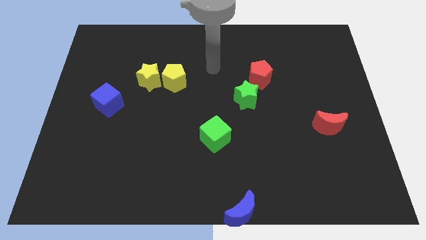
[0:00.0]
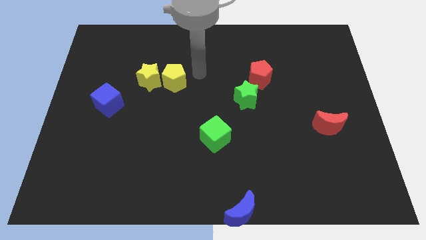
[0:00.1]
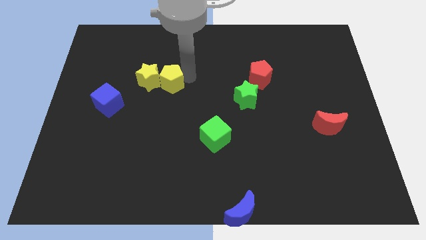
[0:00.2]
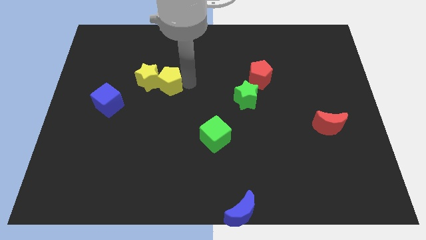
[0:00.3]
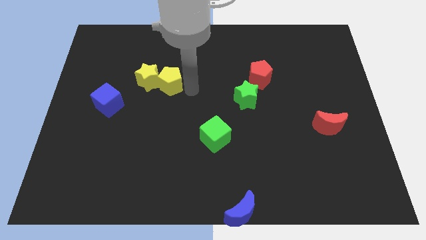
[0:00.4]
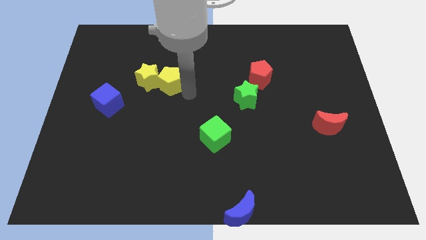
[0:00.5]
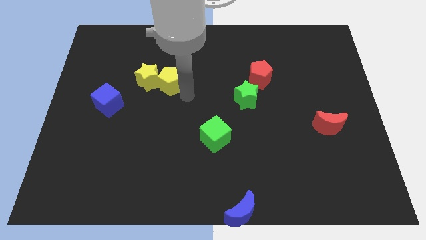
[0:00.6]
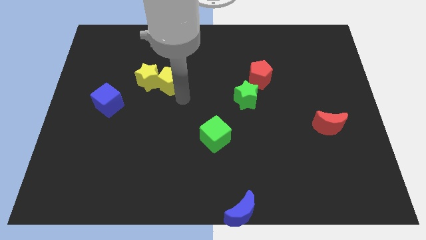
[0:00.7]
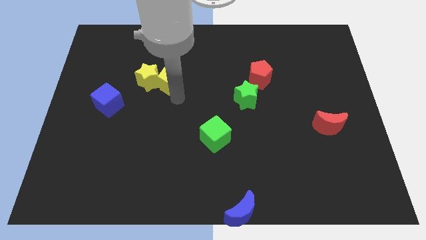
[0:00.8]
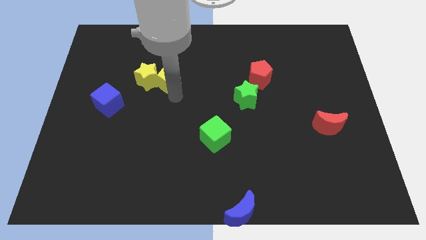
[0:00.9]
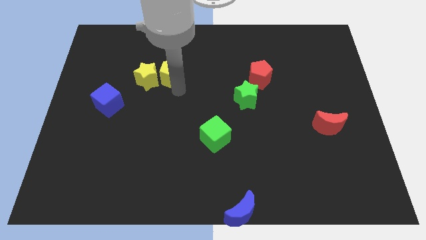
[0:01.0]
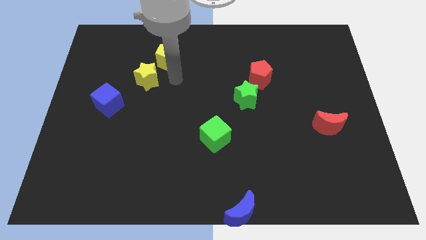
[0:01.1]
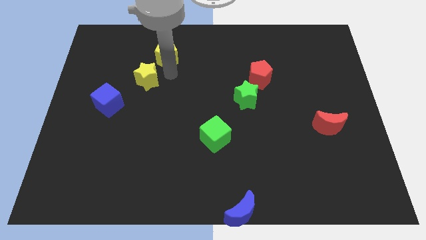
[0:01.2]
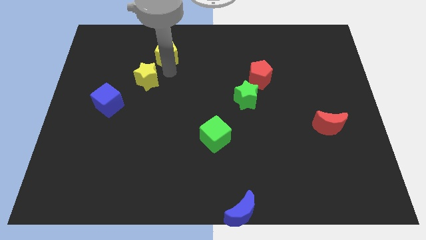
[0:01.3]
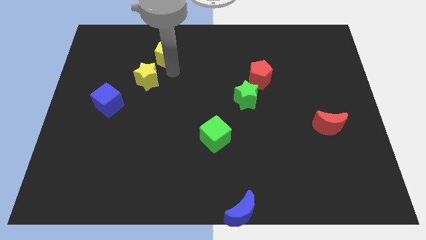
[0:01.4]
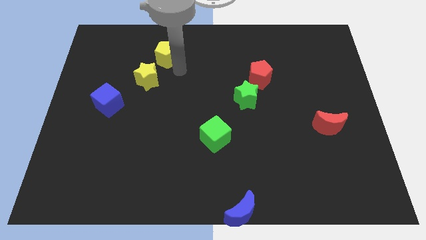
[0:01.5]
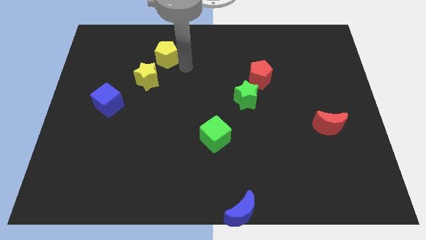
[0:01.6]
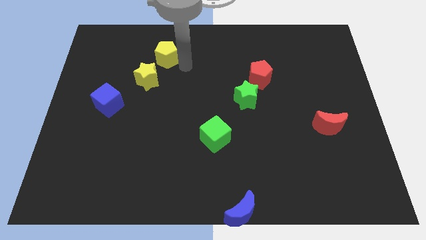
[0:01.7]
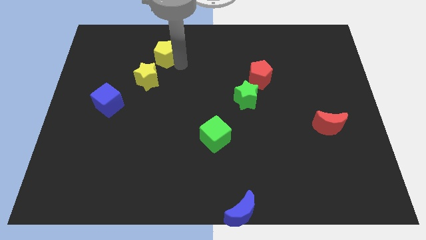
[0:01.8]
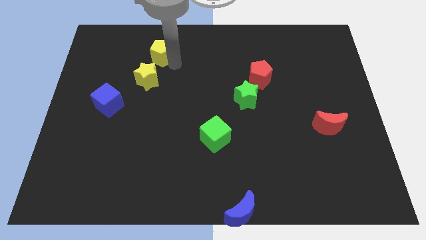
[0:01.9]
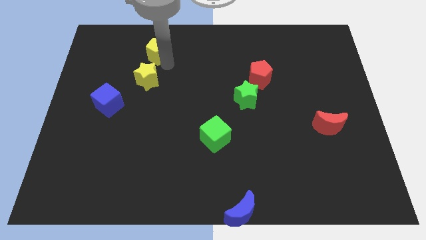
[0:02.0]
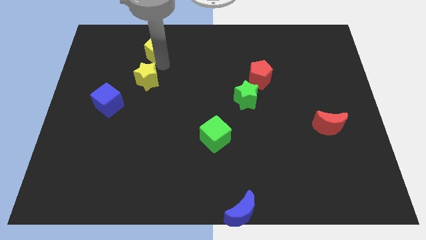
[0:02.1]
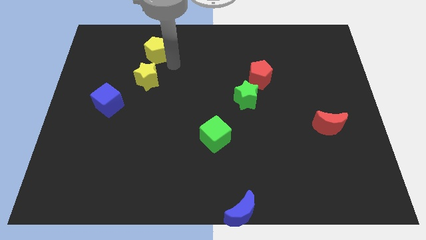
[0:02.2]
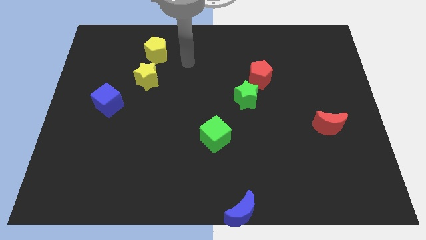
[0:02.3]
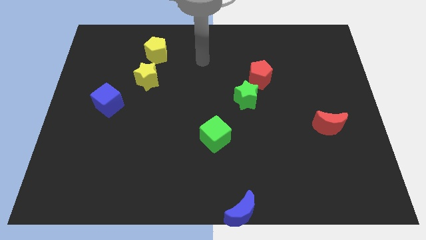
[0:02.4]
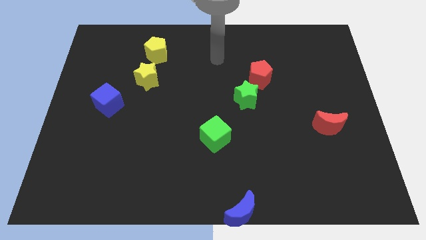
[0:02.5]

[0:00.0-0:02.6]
move the yellow pentagon above the yellow star

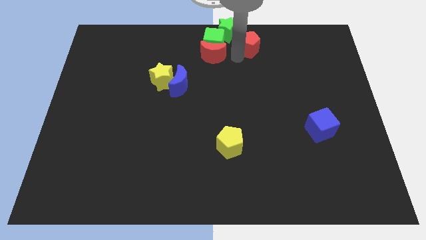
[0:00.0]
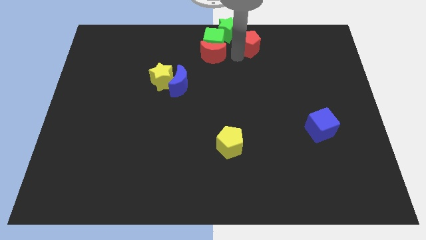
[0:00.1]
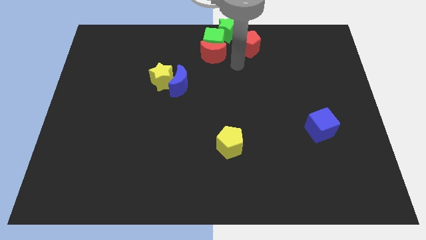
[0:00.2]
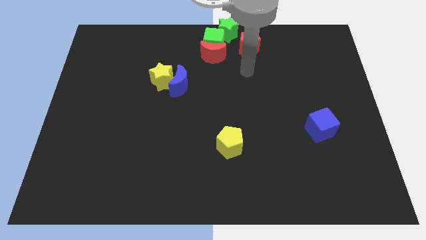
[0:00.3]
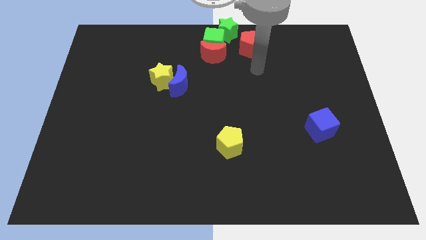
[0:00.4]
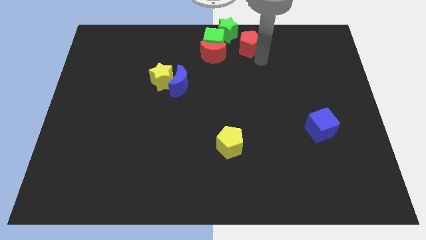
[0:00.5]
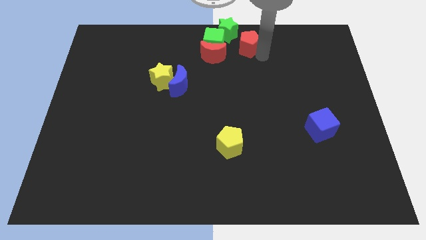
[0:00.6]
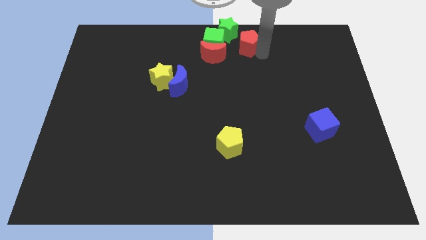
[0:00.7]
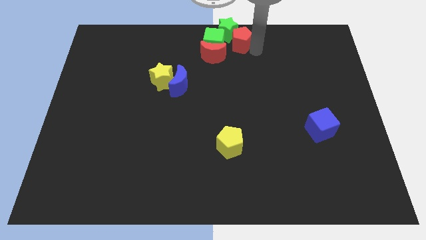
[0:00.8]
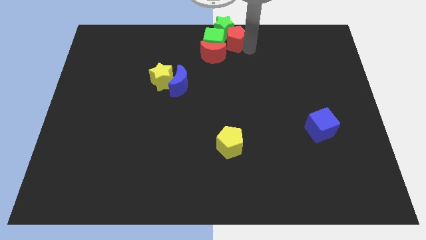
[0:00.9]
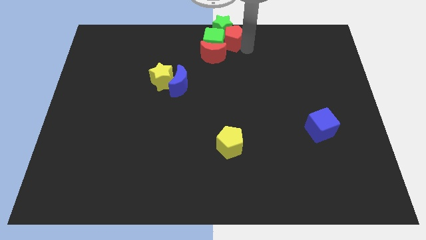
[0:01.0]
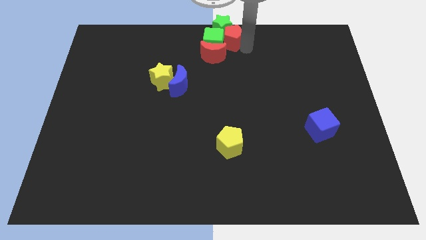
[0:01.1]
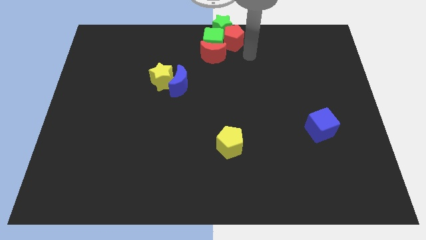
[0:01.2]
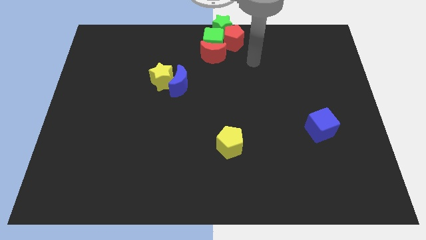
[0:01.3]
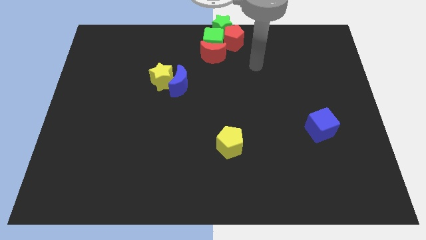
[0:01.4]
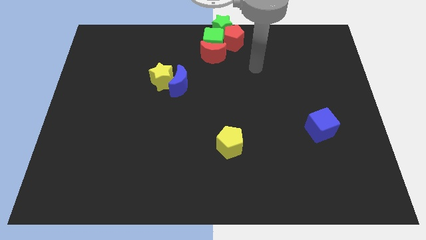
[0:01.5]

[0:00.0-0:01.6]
add the red pentagon to the group of blocks at the top center of the board

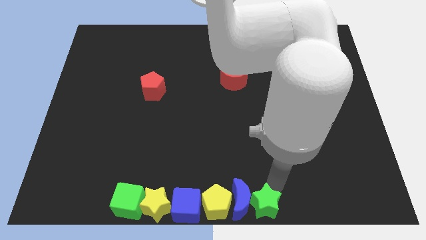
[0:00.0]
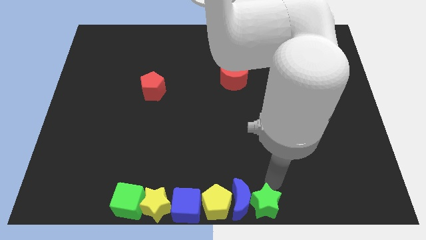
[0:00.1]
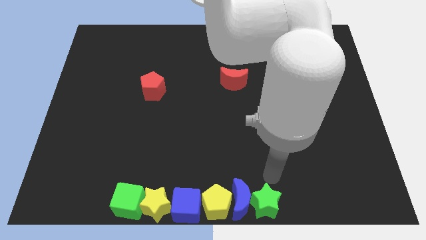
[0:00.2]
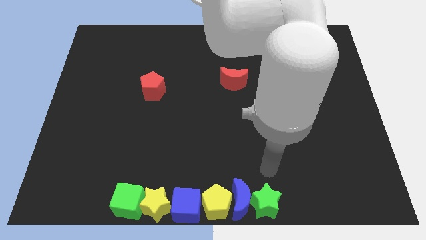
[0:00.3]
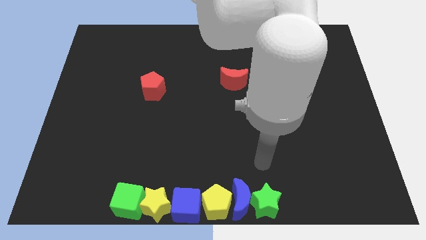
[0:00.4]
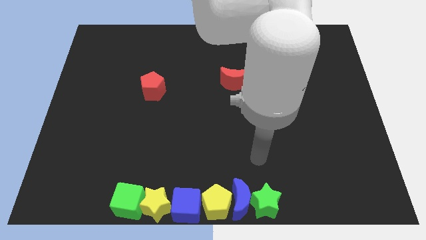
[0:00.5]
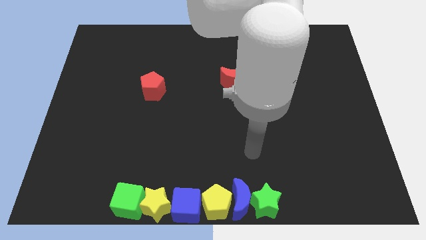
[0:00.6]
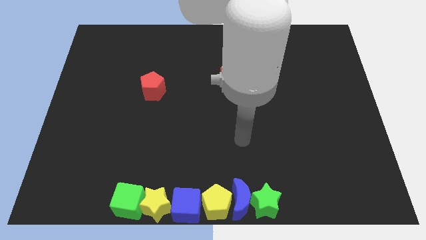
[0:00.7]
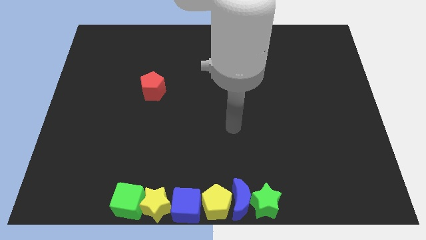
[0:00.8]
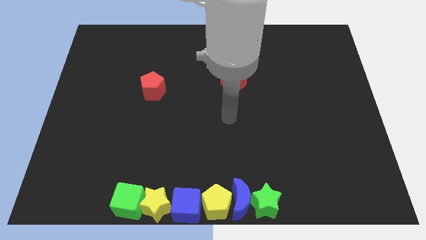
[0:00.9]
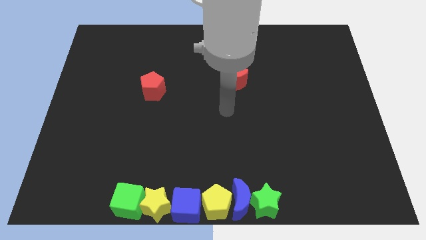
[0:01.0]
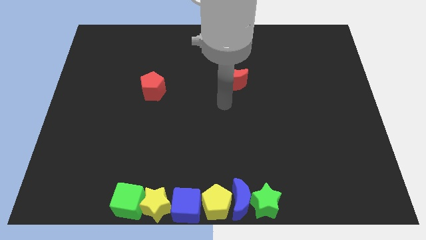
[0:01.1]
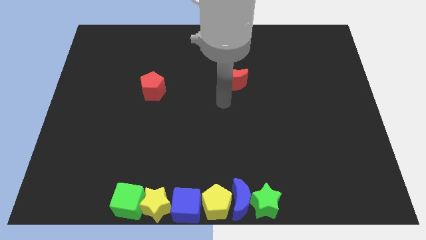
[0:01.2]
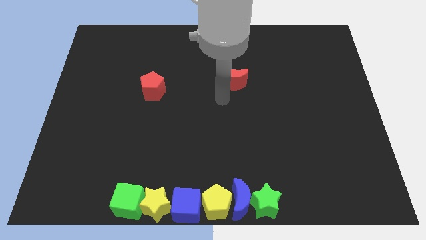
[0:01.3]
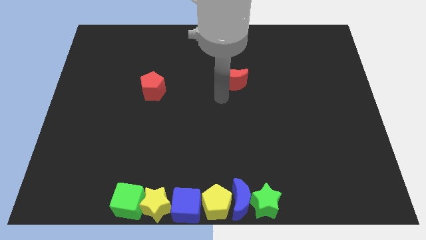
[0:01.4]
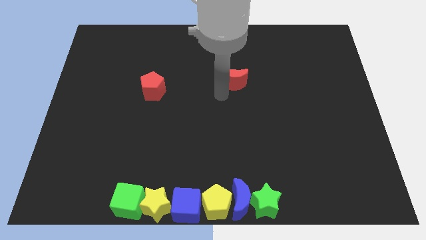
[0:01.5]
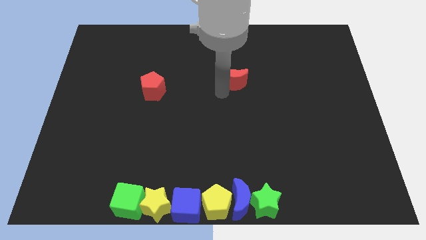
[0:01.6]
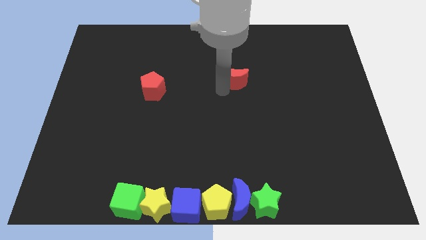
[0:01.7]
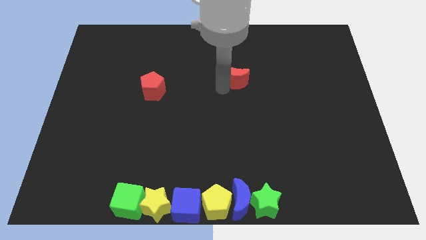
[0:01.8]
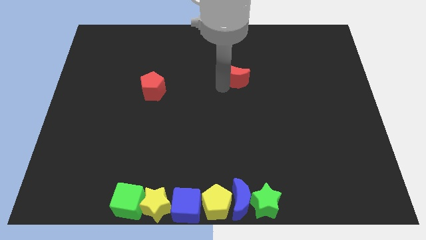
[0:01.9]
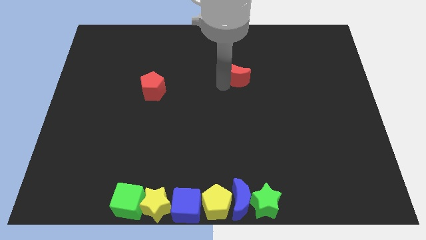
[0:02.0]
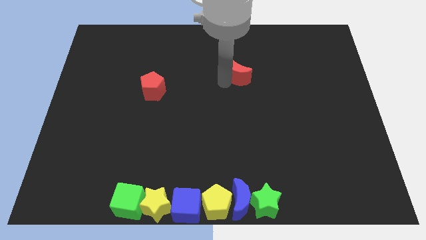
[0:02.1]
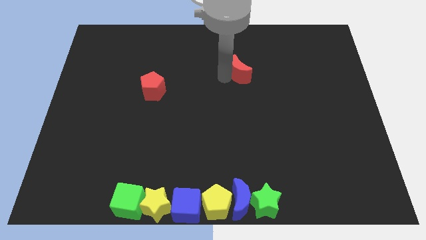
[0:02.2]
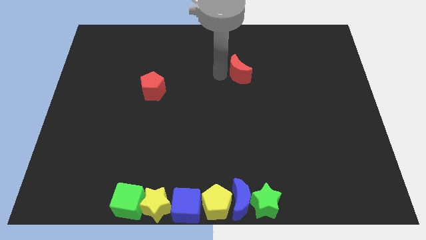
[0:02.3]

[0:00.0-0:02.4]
touch the red moon

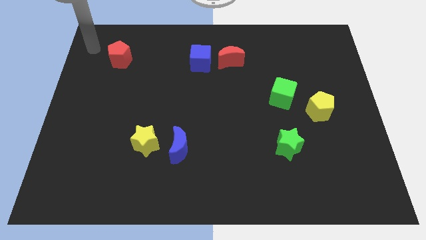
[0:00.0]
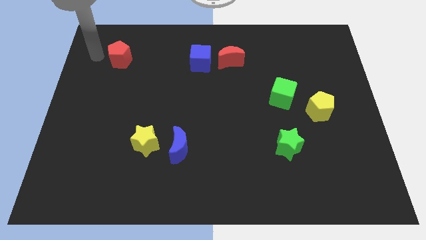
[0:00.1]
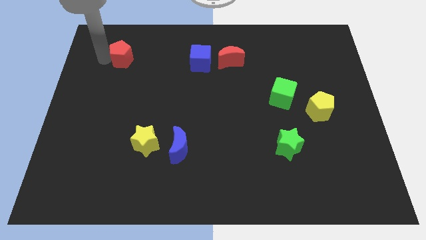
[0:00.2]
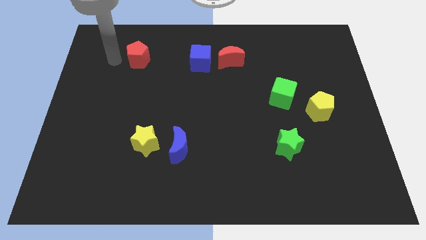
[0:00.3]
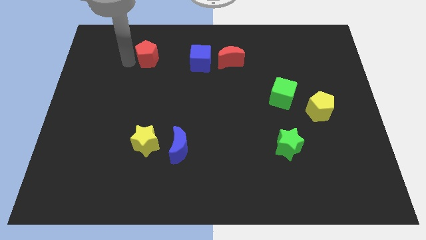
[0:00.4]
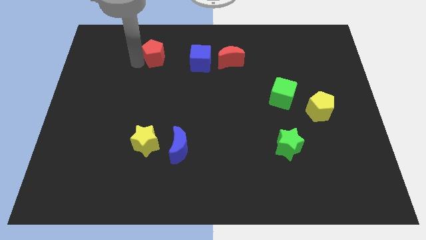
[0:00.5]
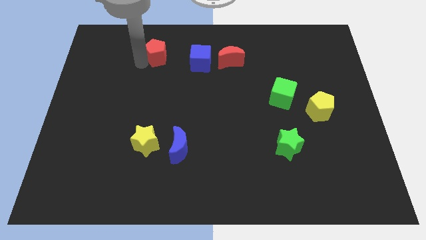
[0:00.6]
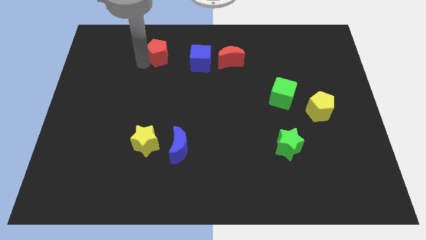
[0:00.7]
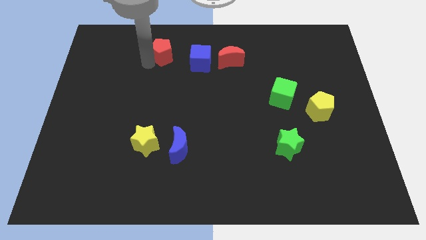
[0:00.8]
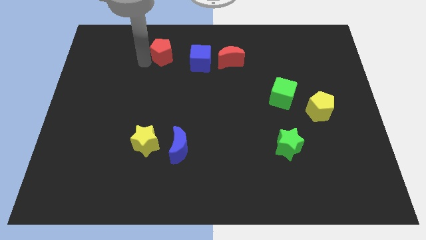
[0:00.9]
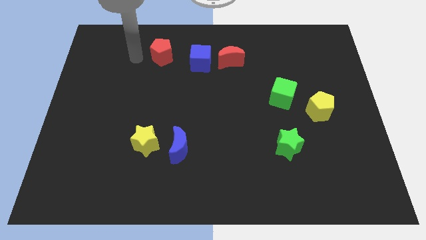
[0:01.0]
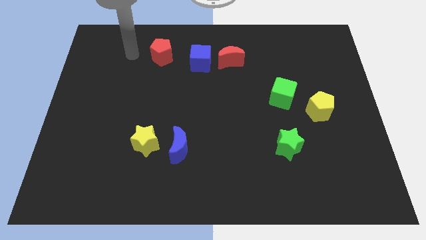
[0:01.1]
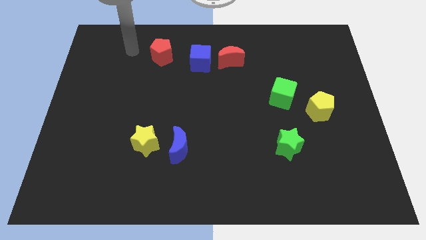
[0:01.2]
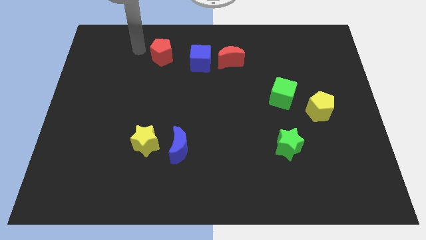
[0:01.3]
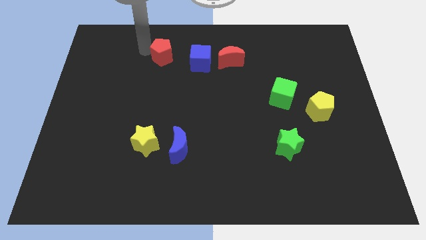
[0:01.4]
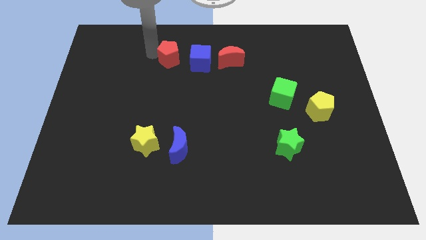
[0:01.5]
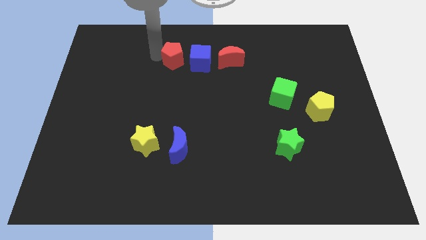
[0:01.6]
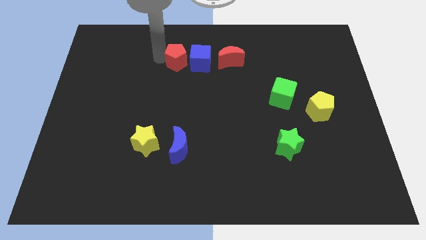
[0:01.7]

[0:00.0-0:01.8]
push the red pentagon towards the left side of the blue cube

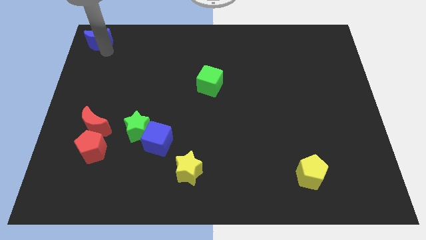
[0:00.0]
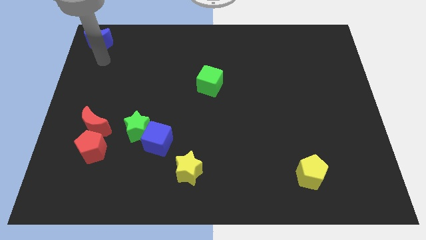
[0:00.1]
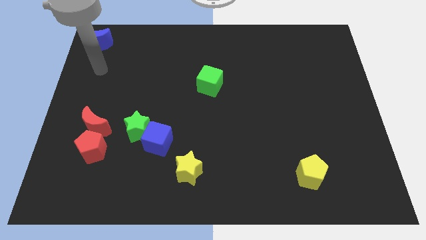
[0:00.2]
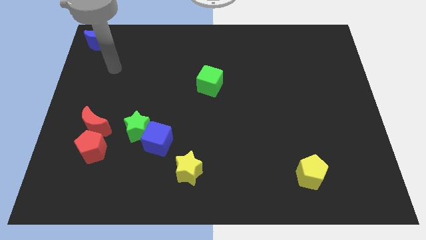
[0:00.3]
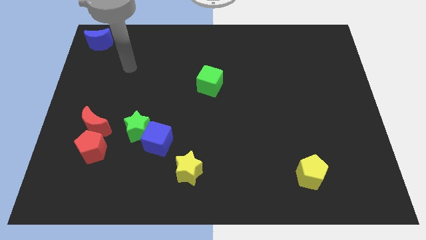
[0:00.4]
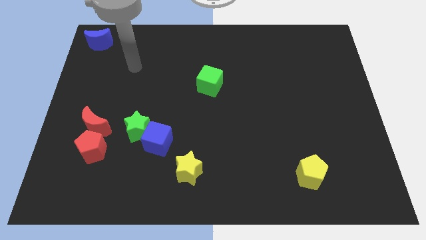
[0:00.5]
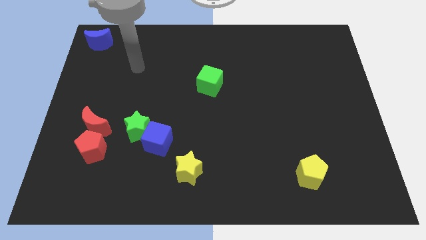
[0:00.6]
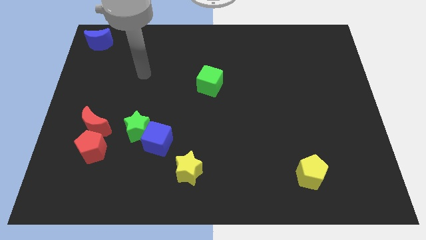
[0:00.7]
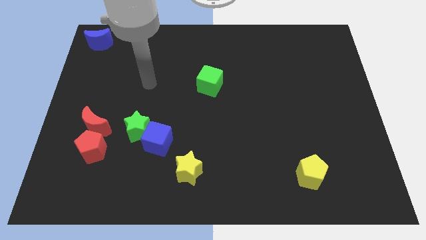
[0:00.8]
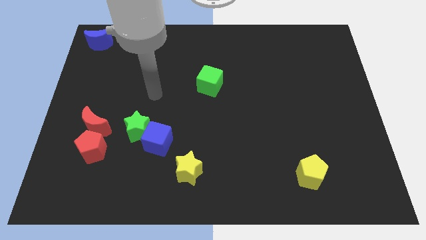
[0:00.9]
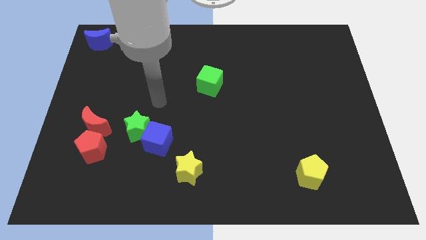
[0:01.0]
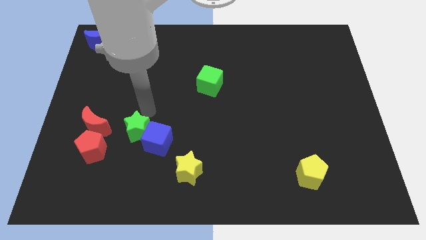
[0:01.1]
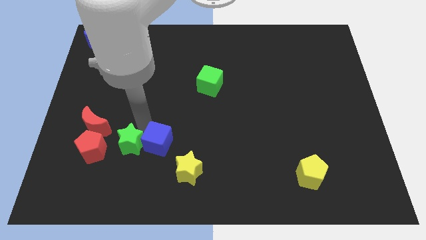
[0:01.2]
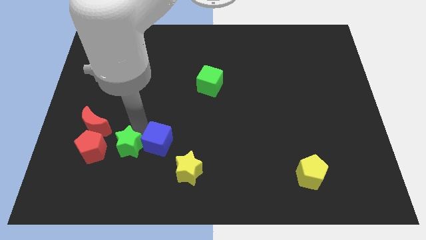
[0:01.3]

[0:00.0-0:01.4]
push green star slightly towards its bottom
